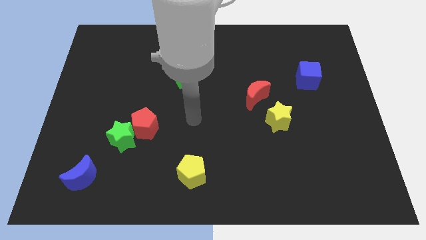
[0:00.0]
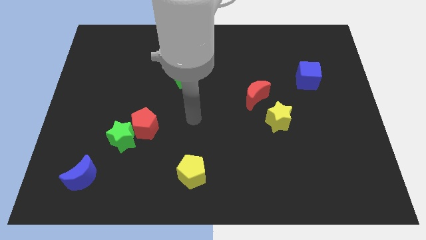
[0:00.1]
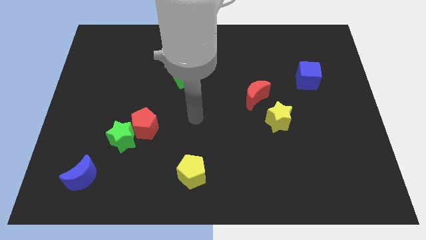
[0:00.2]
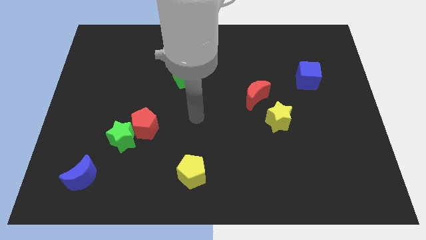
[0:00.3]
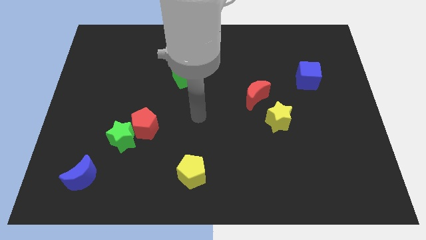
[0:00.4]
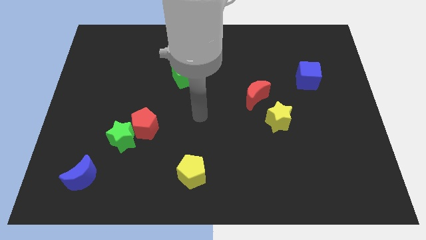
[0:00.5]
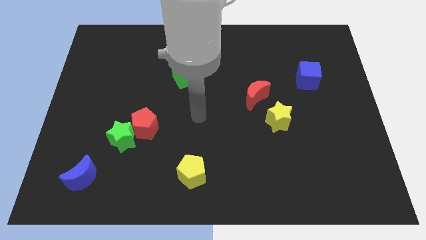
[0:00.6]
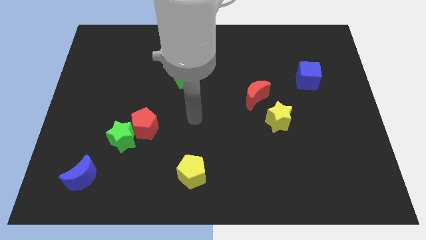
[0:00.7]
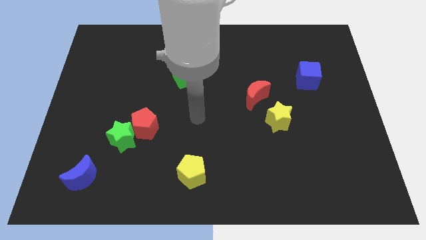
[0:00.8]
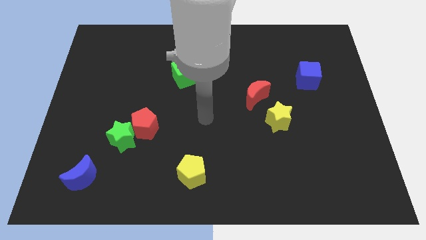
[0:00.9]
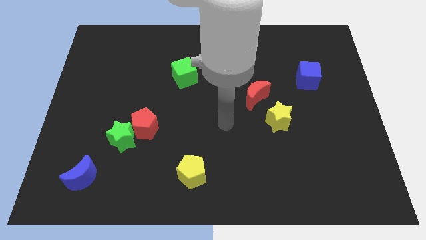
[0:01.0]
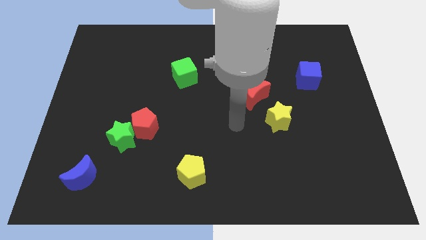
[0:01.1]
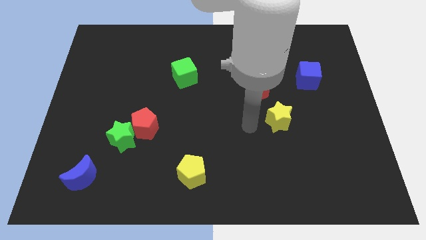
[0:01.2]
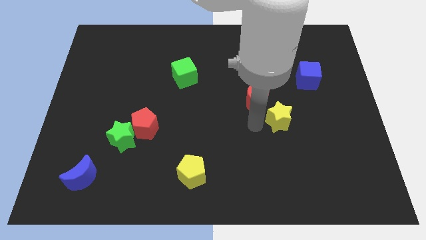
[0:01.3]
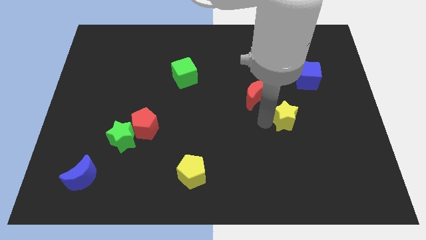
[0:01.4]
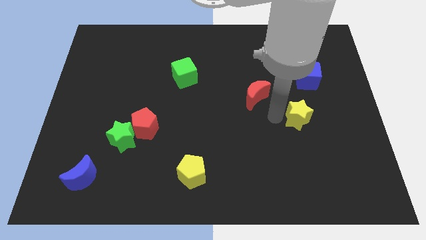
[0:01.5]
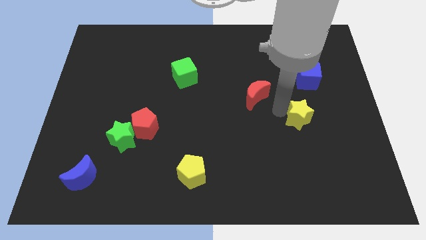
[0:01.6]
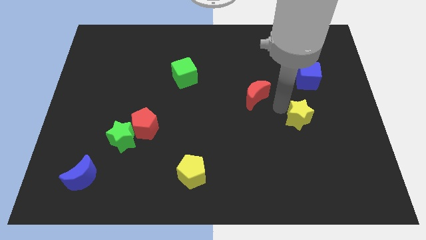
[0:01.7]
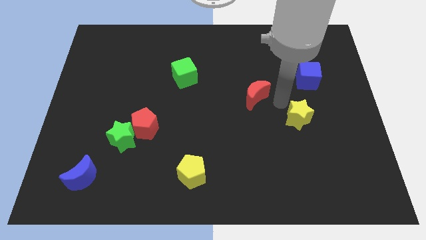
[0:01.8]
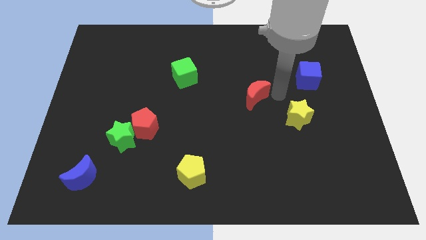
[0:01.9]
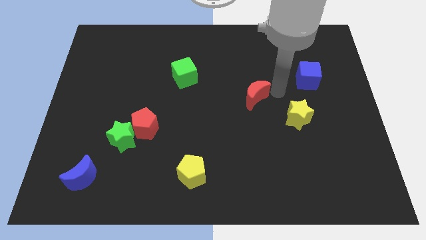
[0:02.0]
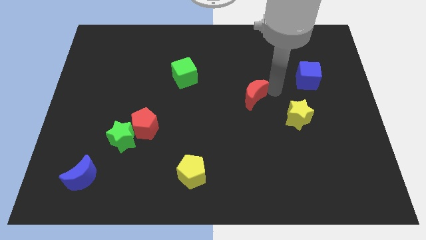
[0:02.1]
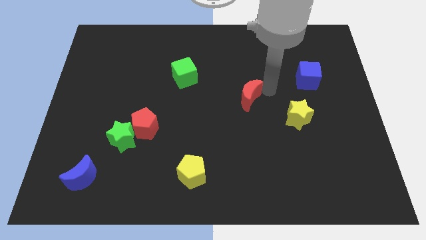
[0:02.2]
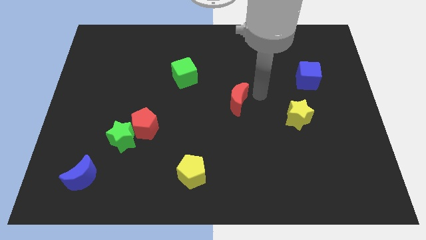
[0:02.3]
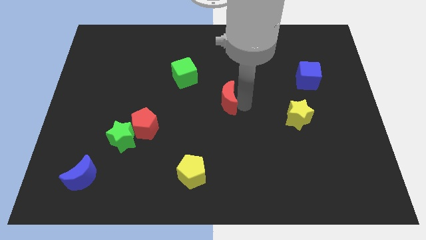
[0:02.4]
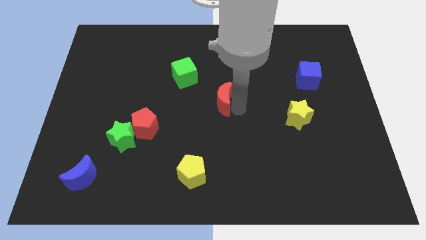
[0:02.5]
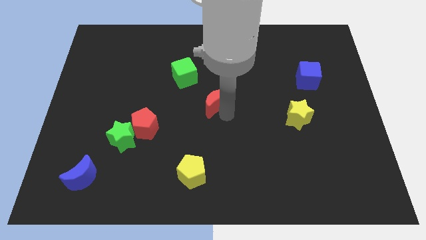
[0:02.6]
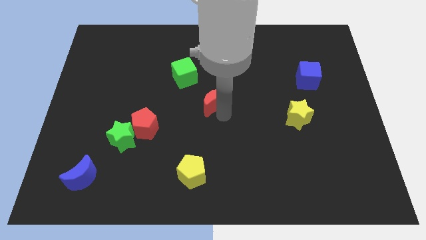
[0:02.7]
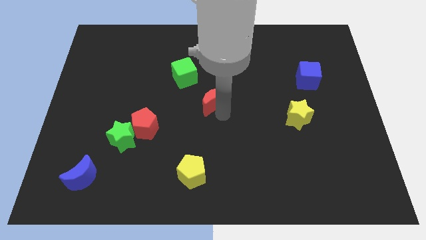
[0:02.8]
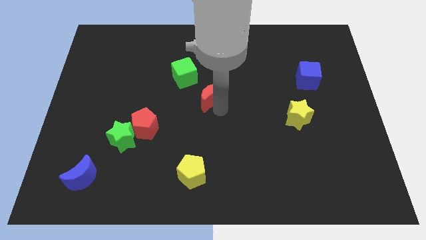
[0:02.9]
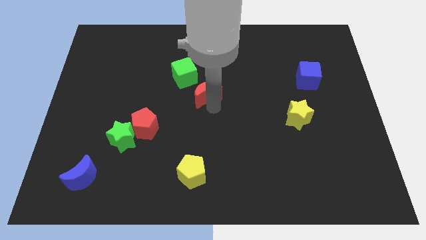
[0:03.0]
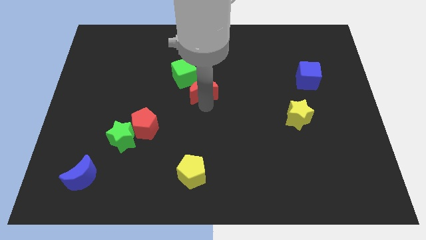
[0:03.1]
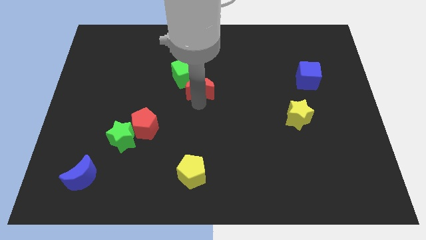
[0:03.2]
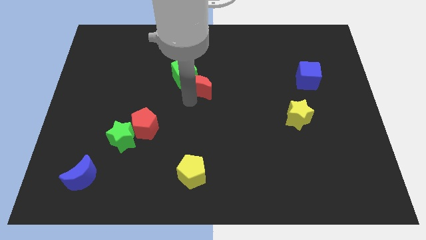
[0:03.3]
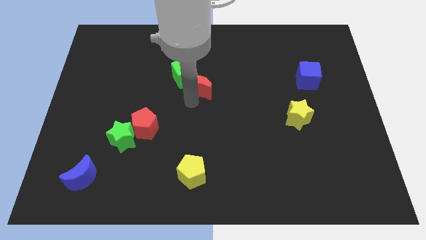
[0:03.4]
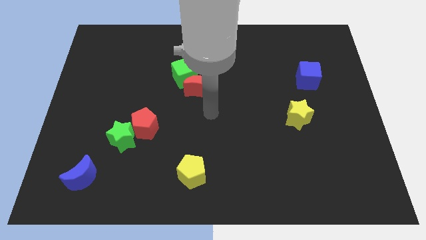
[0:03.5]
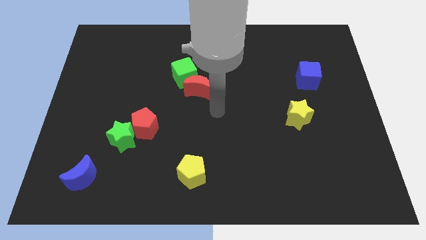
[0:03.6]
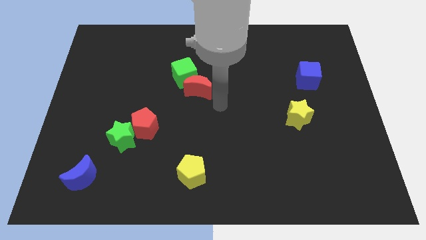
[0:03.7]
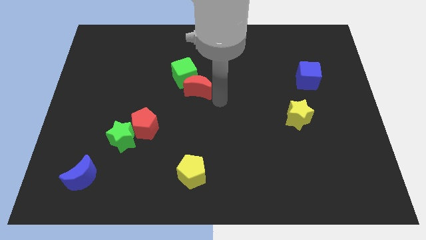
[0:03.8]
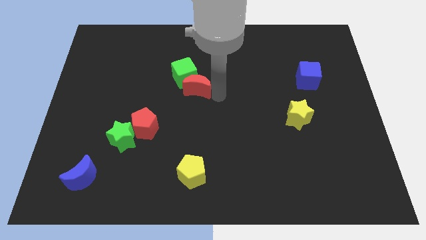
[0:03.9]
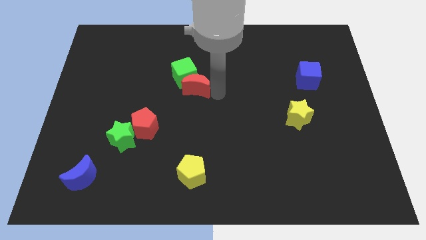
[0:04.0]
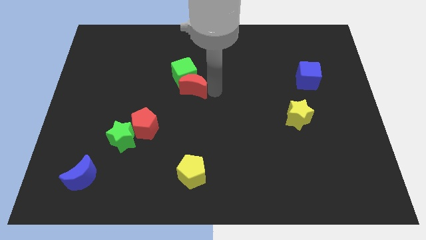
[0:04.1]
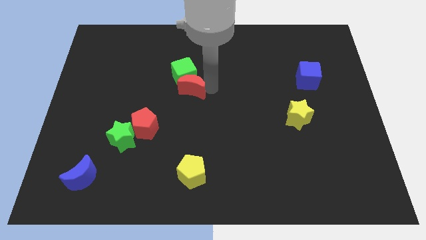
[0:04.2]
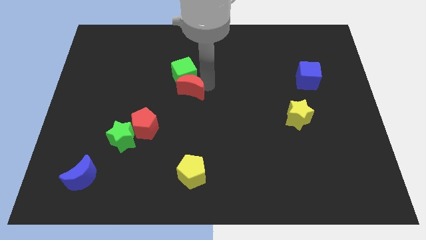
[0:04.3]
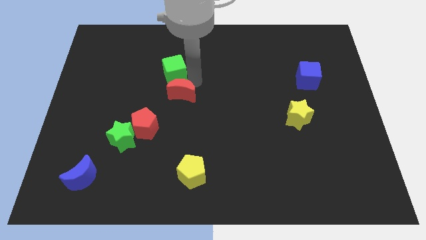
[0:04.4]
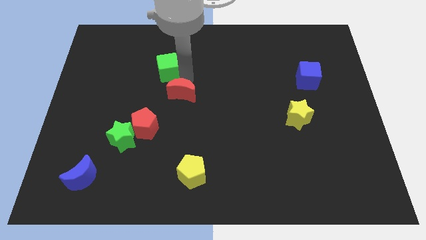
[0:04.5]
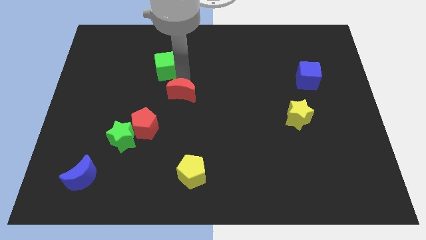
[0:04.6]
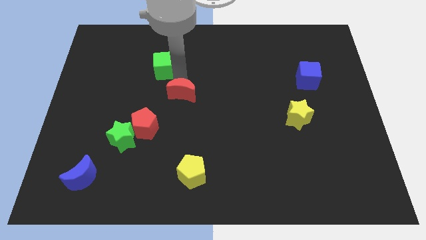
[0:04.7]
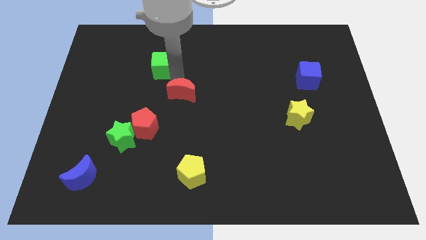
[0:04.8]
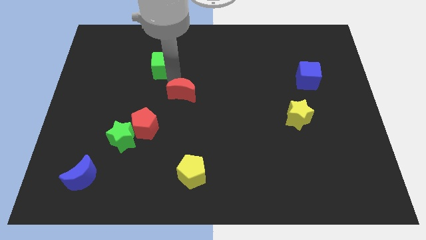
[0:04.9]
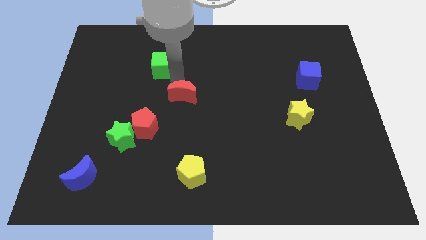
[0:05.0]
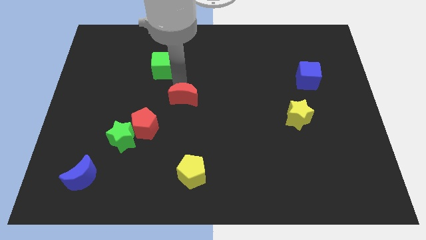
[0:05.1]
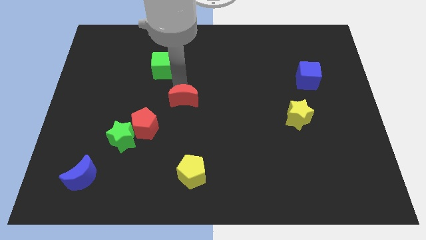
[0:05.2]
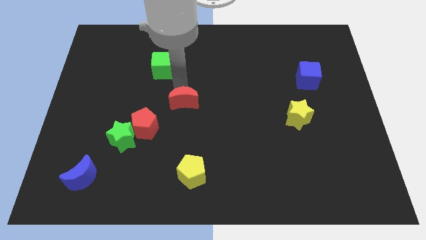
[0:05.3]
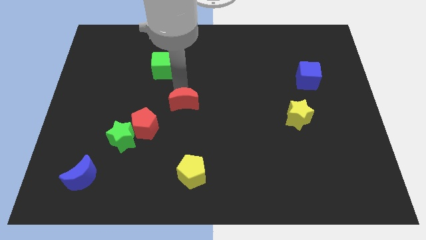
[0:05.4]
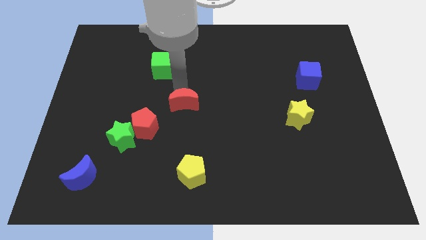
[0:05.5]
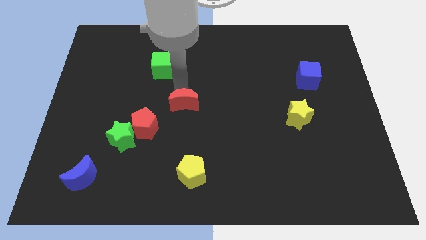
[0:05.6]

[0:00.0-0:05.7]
push the red moon towards the green star

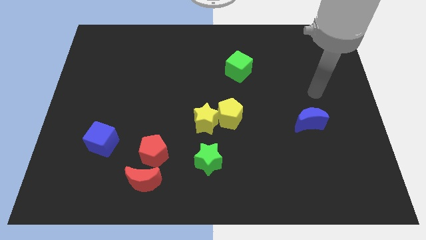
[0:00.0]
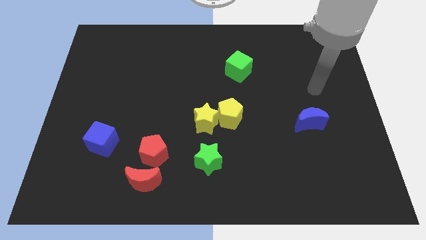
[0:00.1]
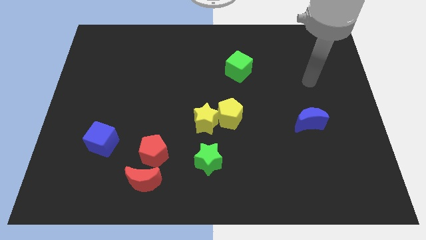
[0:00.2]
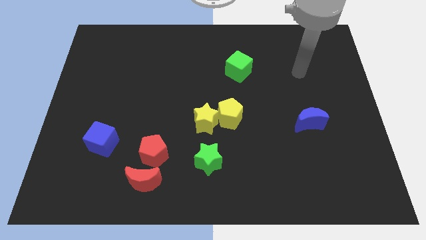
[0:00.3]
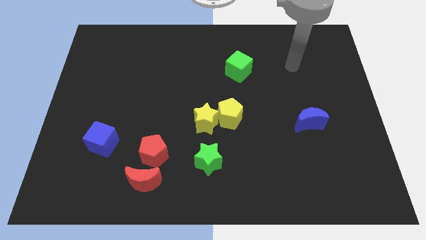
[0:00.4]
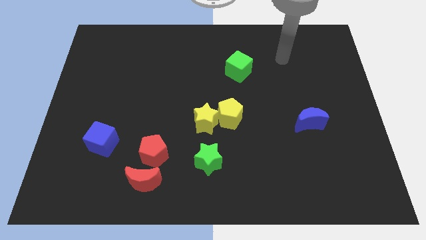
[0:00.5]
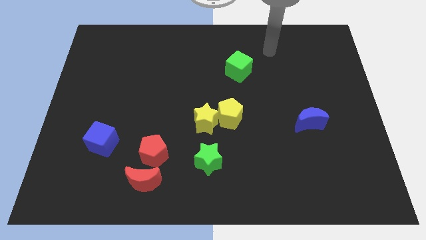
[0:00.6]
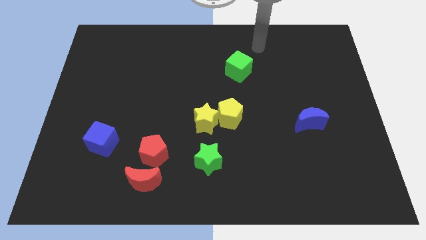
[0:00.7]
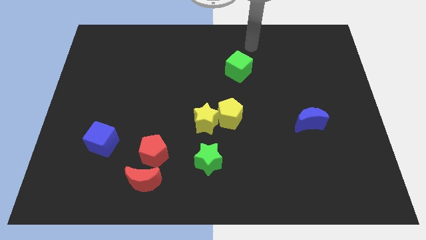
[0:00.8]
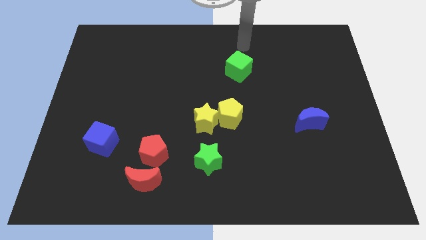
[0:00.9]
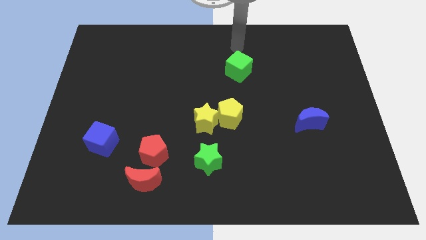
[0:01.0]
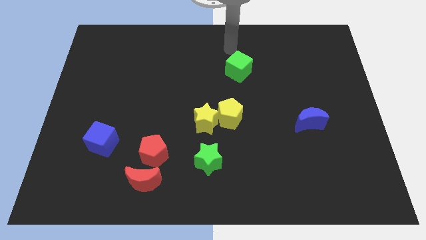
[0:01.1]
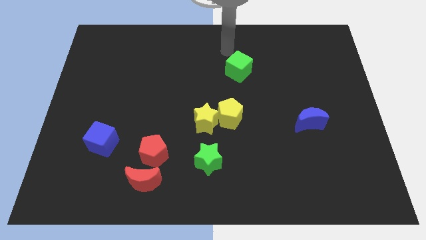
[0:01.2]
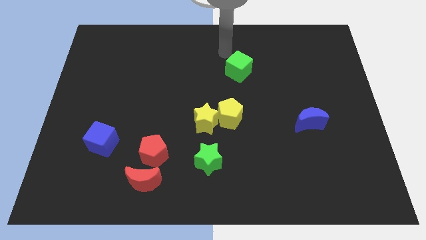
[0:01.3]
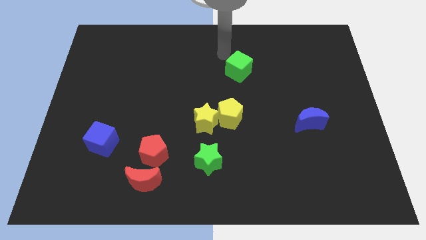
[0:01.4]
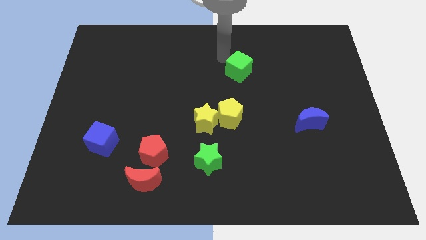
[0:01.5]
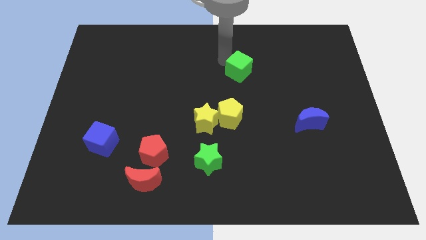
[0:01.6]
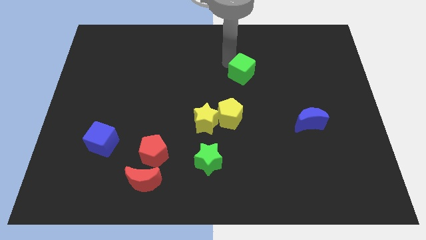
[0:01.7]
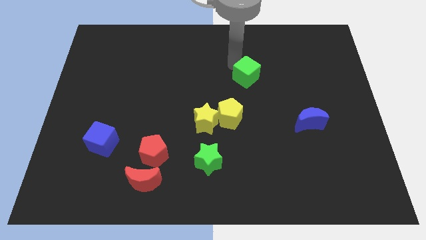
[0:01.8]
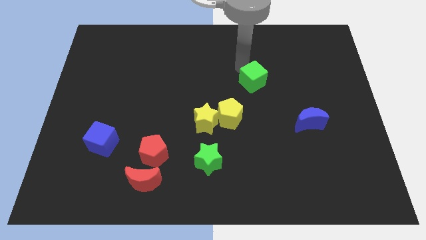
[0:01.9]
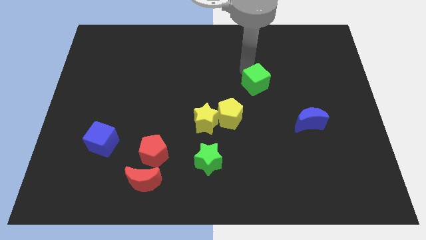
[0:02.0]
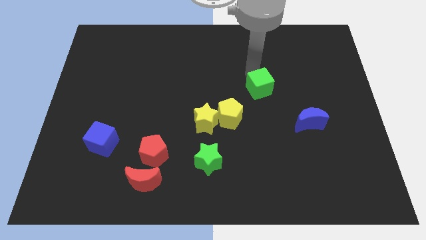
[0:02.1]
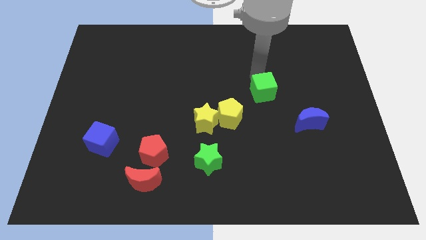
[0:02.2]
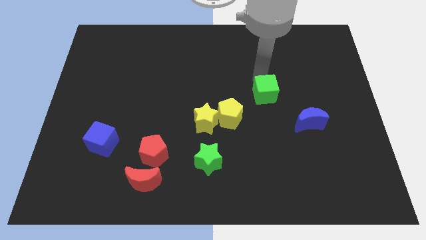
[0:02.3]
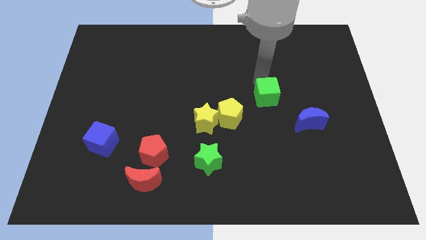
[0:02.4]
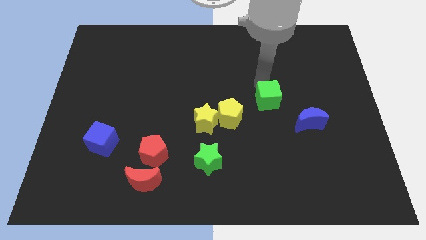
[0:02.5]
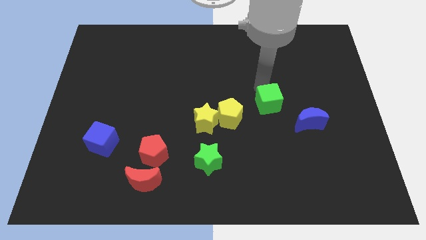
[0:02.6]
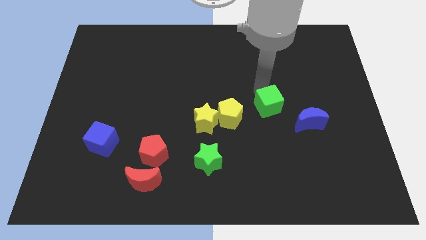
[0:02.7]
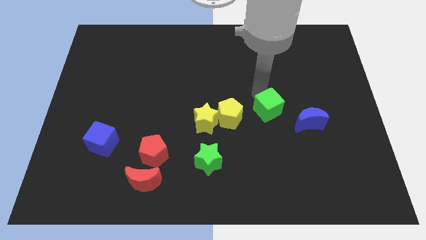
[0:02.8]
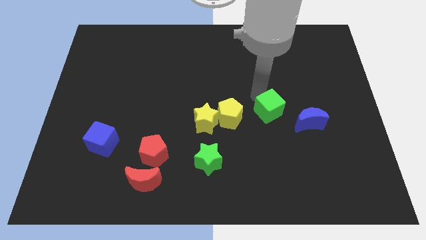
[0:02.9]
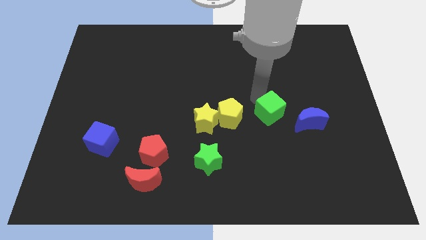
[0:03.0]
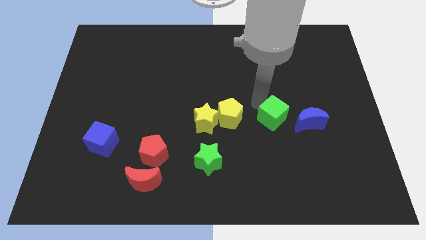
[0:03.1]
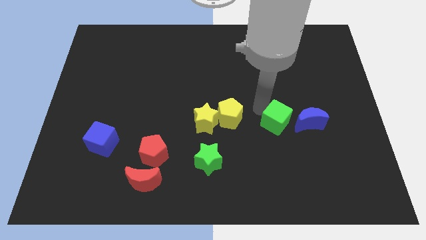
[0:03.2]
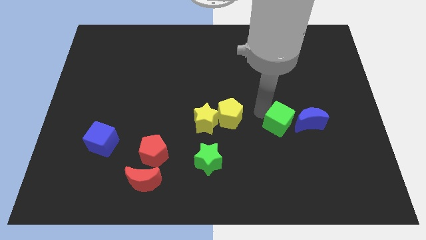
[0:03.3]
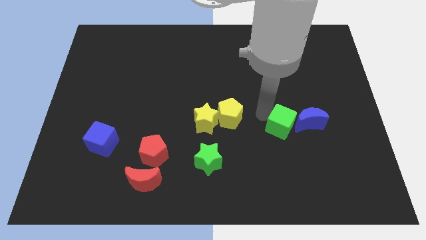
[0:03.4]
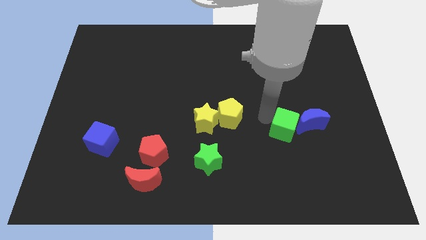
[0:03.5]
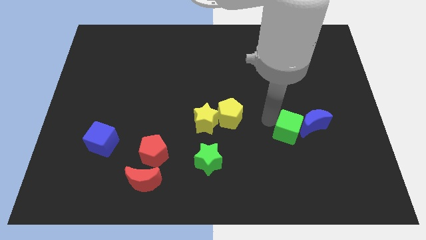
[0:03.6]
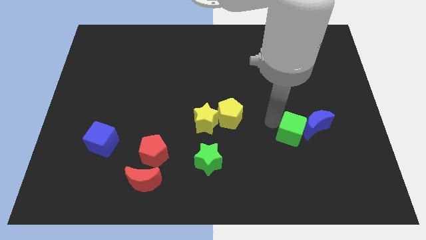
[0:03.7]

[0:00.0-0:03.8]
put the green cube close to the blue moon
